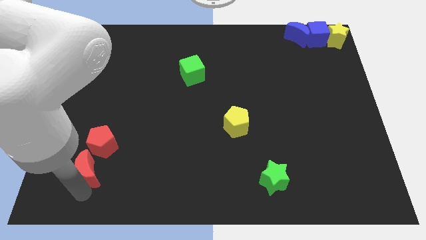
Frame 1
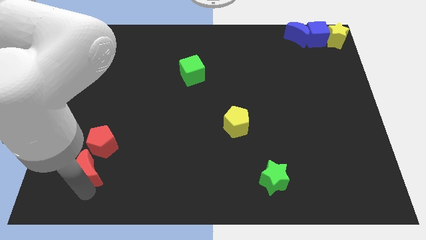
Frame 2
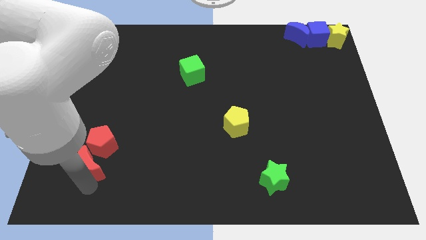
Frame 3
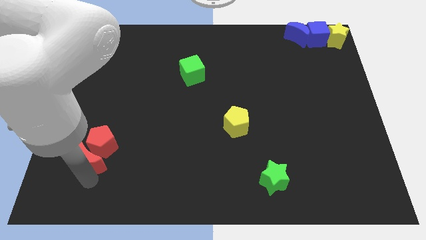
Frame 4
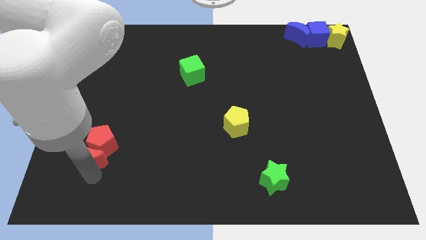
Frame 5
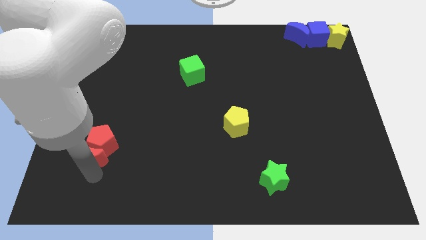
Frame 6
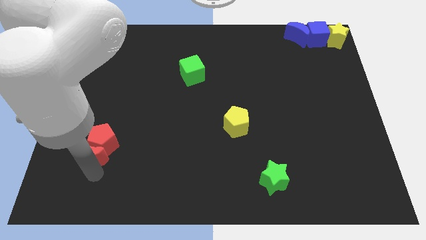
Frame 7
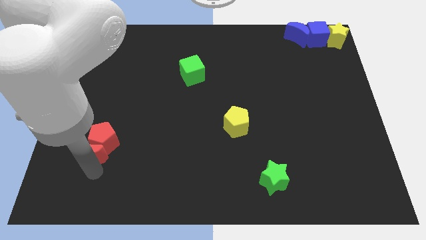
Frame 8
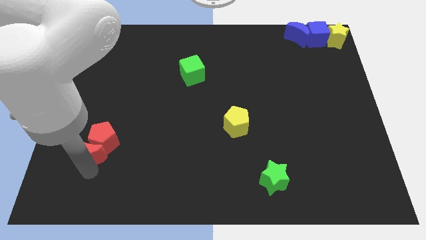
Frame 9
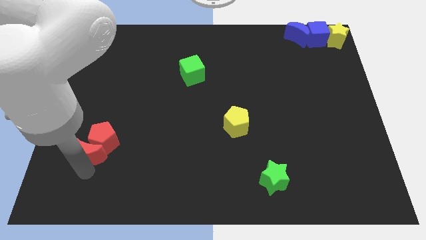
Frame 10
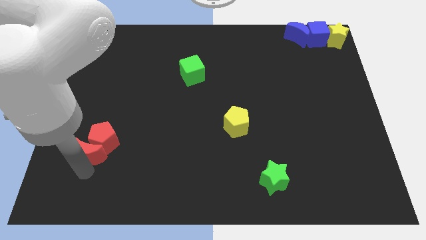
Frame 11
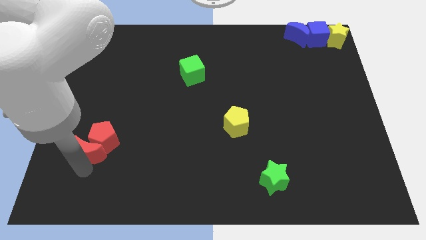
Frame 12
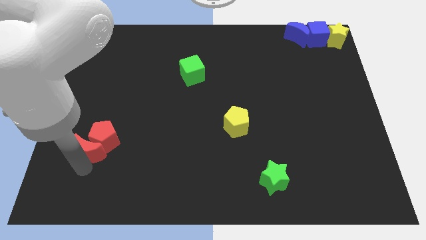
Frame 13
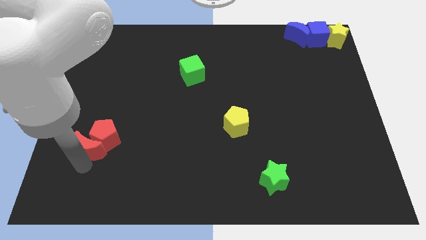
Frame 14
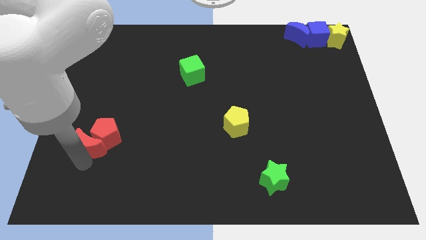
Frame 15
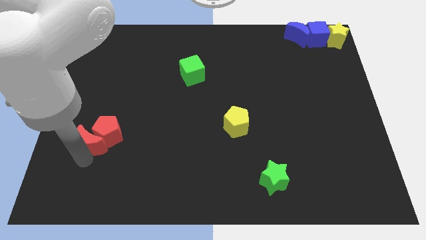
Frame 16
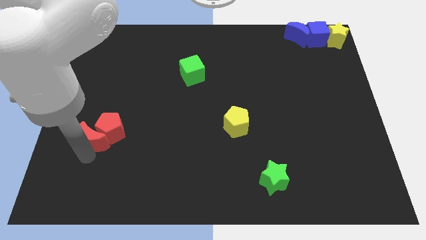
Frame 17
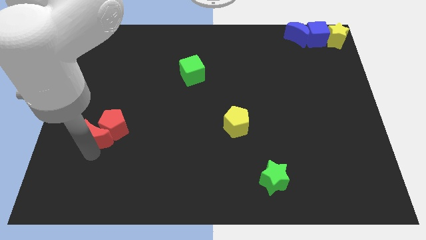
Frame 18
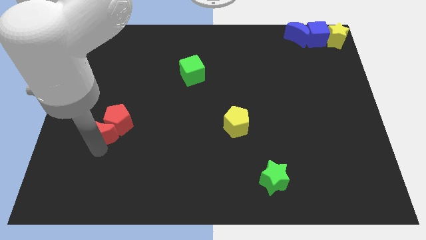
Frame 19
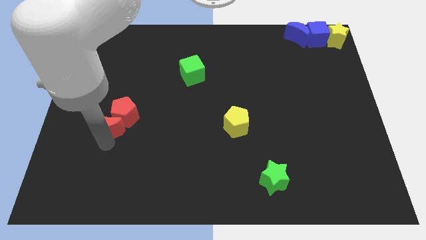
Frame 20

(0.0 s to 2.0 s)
push red blocks upwards

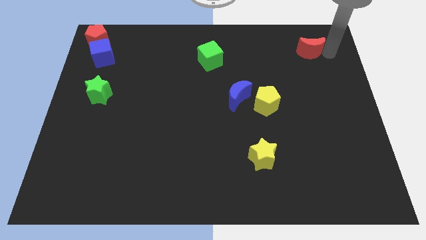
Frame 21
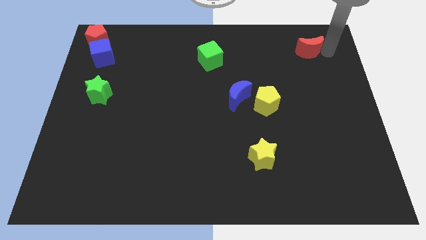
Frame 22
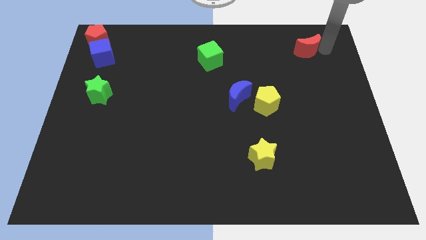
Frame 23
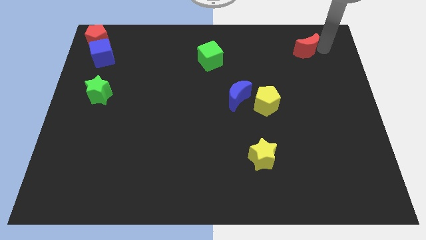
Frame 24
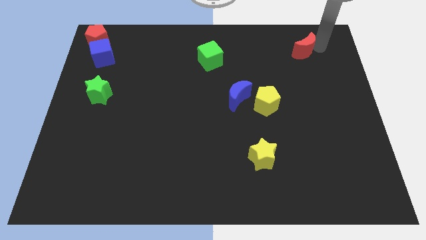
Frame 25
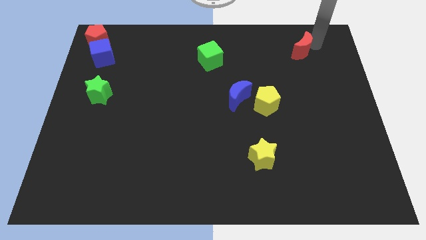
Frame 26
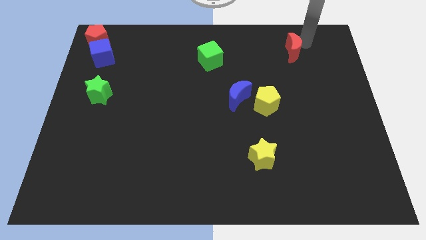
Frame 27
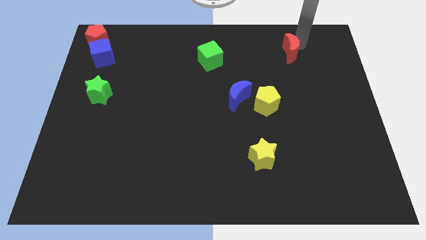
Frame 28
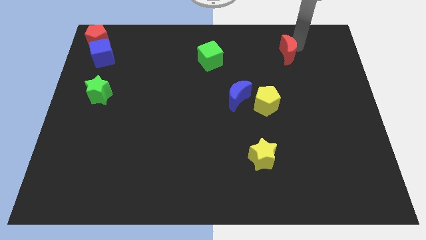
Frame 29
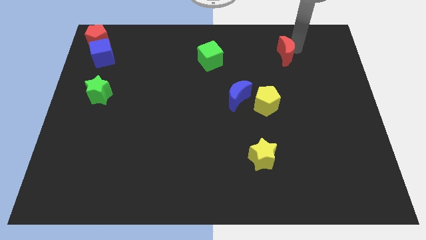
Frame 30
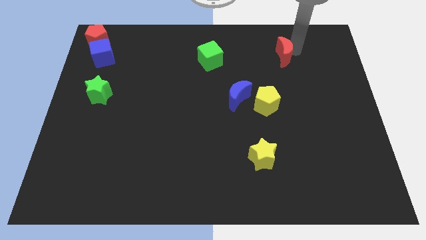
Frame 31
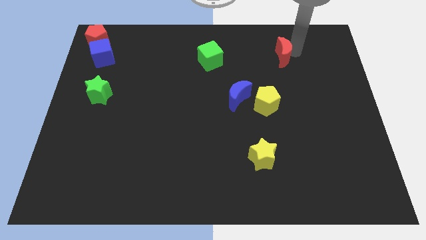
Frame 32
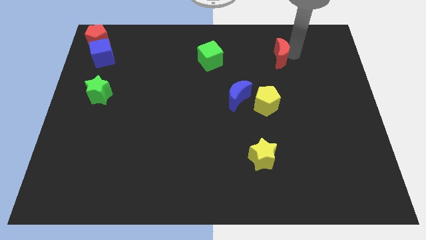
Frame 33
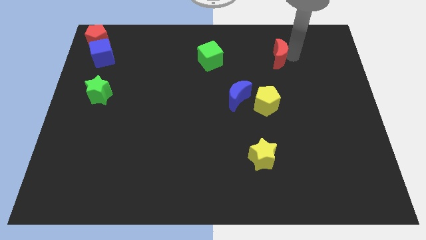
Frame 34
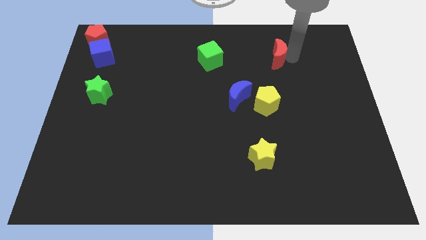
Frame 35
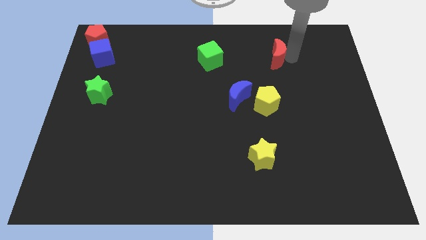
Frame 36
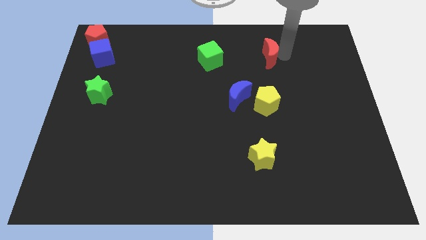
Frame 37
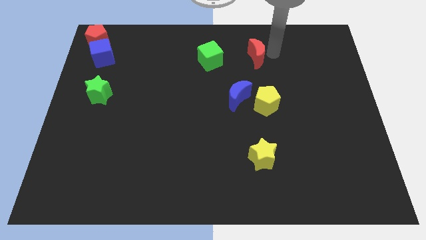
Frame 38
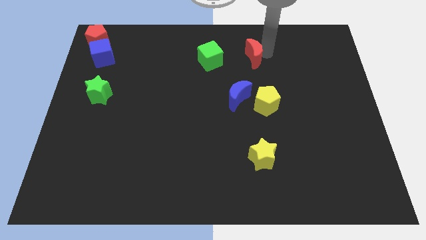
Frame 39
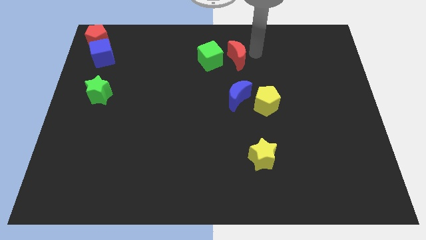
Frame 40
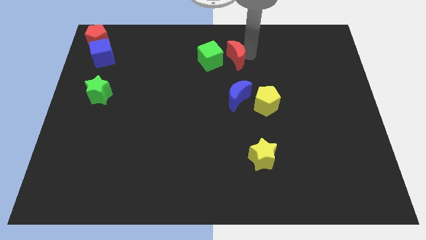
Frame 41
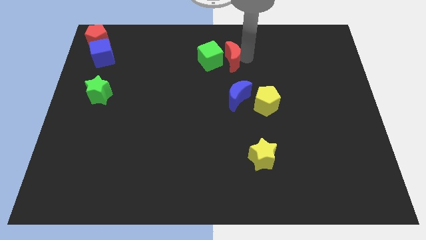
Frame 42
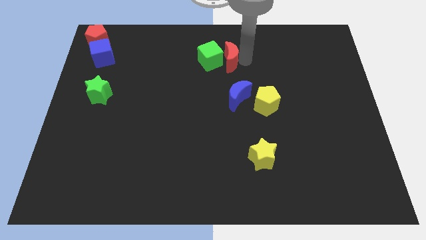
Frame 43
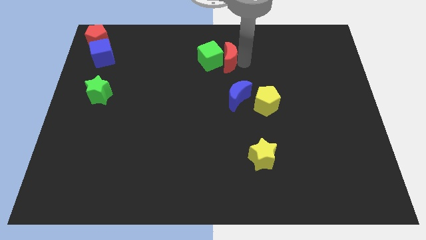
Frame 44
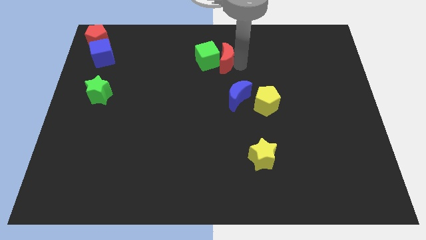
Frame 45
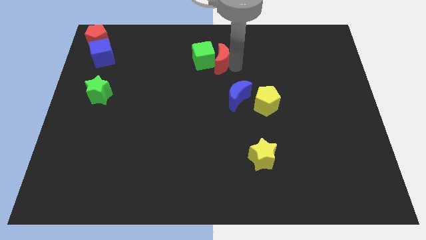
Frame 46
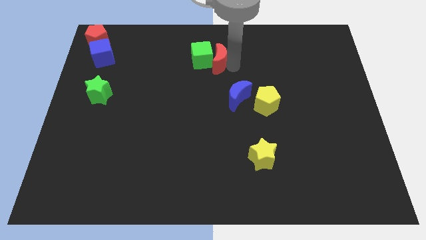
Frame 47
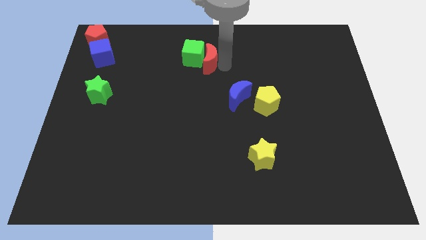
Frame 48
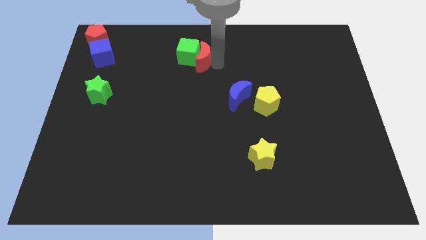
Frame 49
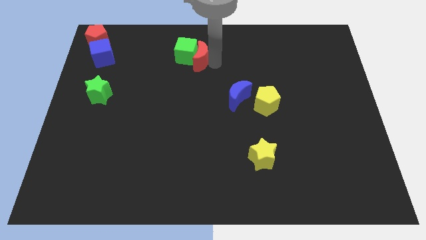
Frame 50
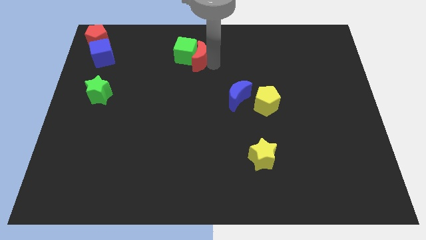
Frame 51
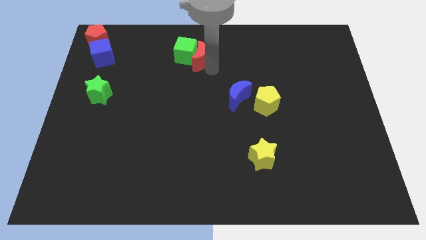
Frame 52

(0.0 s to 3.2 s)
push the red crescent into the green cube

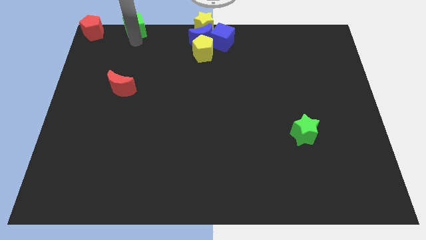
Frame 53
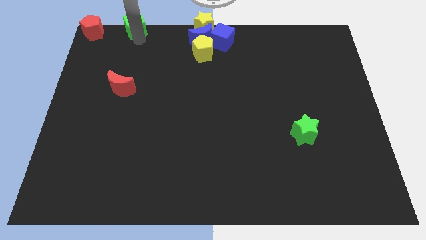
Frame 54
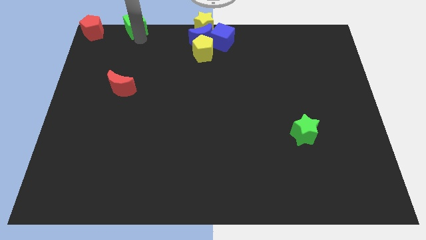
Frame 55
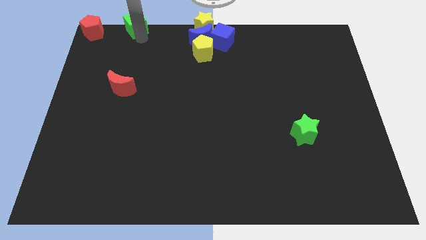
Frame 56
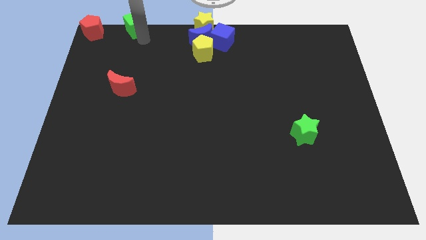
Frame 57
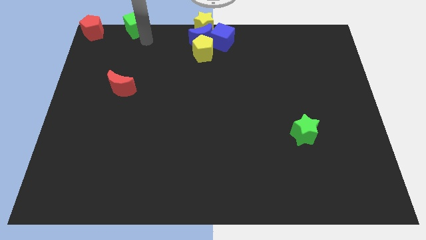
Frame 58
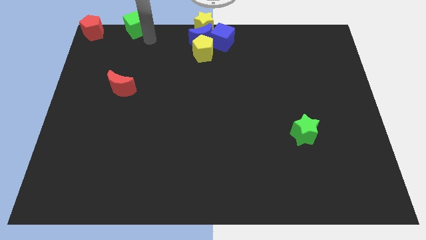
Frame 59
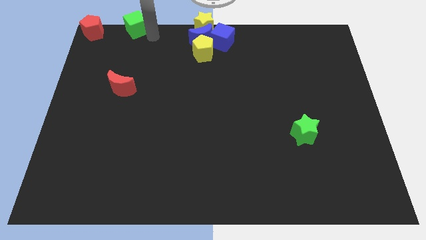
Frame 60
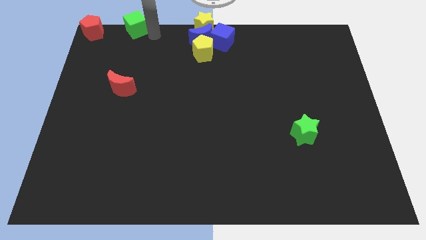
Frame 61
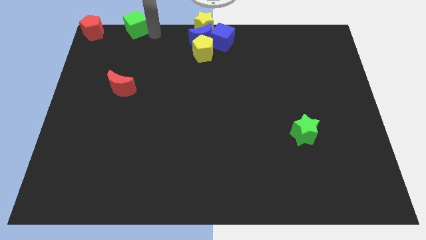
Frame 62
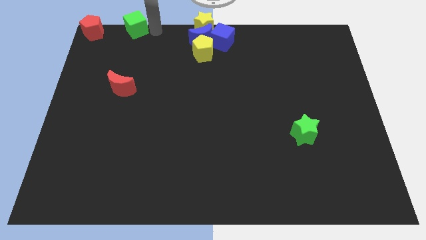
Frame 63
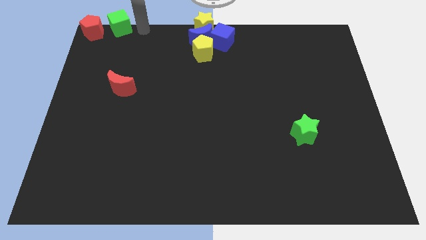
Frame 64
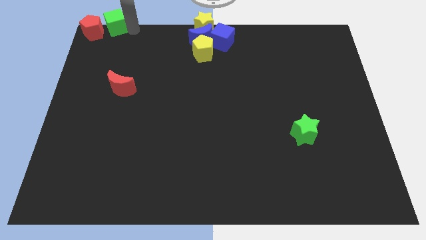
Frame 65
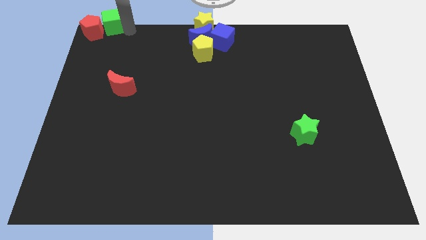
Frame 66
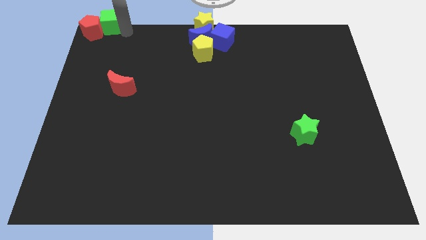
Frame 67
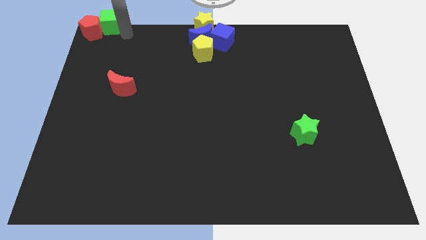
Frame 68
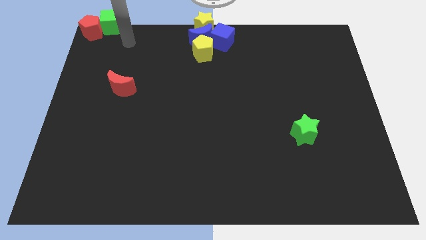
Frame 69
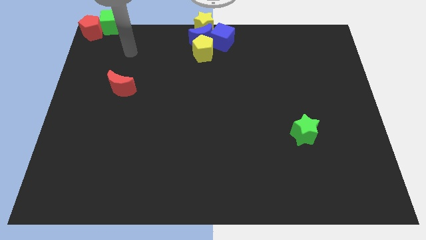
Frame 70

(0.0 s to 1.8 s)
place the green cube at the top left corner

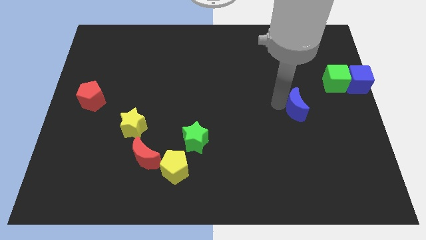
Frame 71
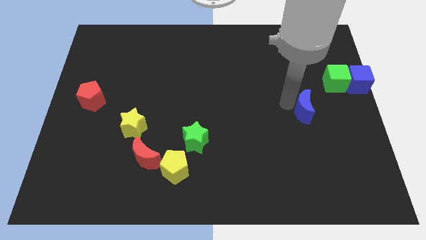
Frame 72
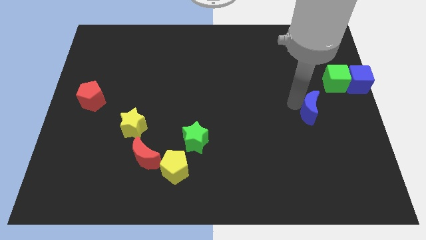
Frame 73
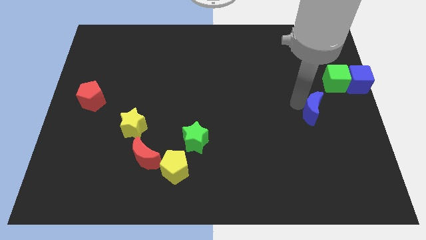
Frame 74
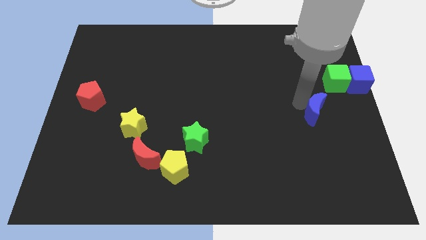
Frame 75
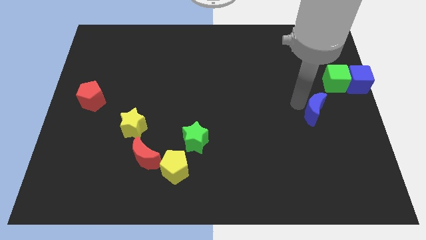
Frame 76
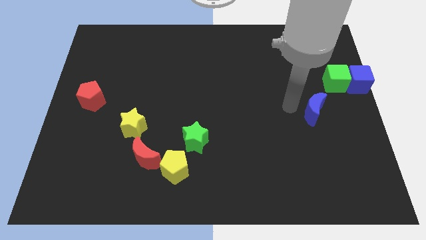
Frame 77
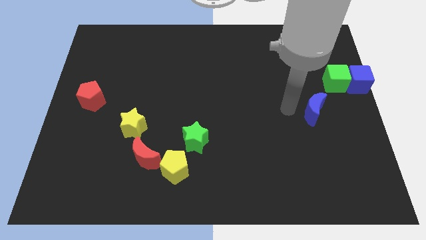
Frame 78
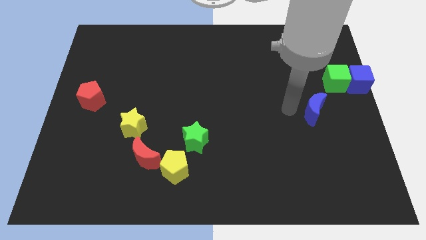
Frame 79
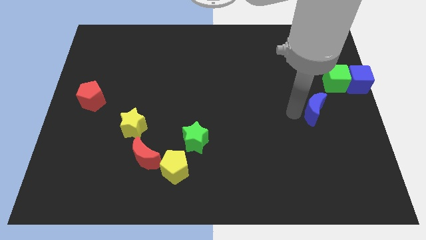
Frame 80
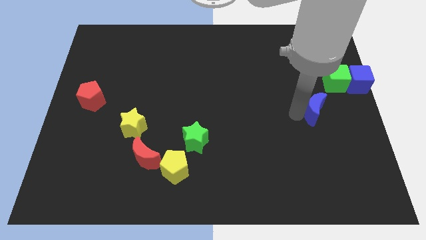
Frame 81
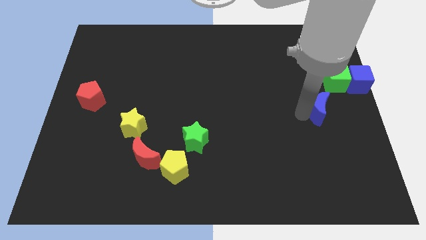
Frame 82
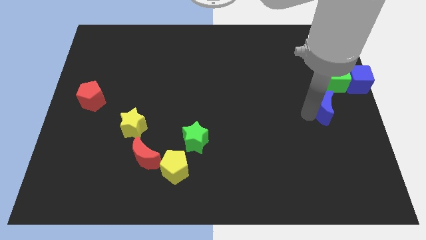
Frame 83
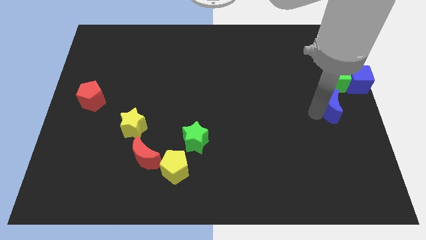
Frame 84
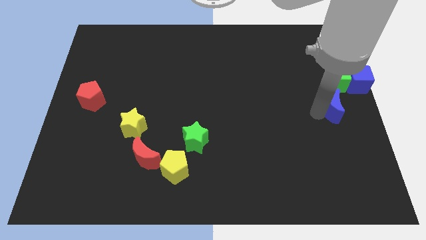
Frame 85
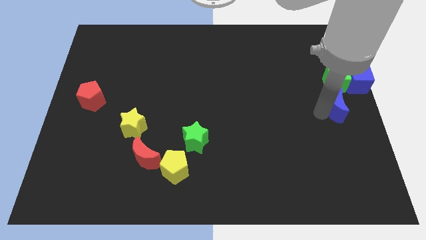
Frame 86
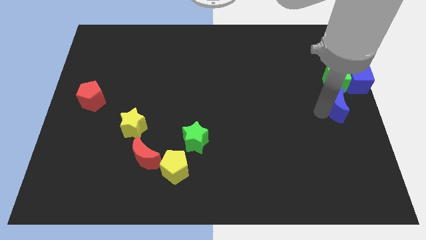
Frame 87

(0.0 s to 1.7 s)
move the blue crescent to the bottom of the green cube

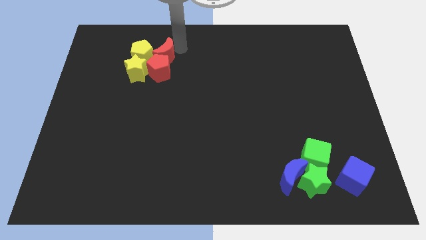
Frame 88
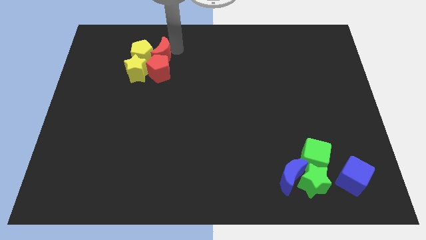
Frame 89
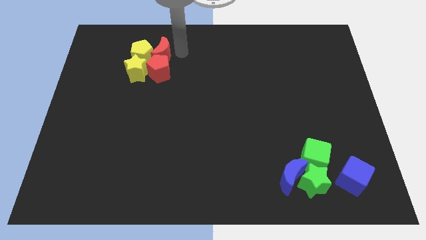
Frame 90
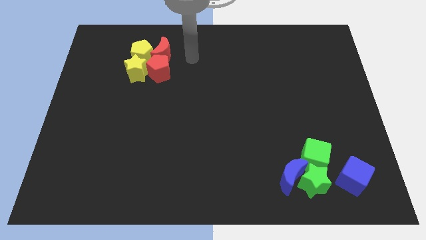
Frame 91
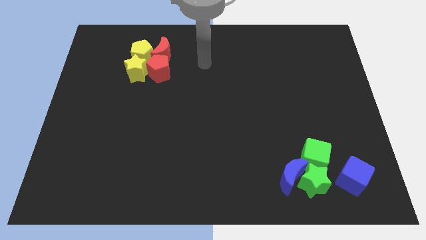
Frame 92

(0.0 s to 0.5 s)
place your hand at the top center
